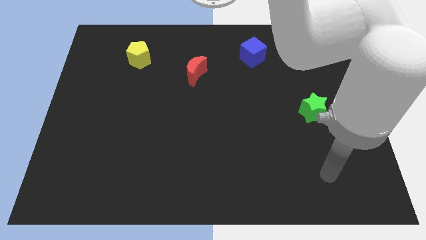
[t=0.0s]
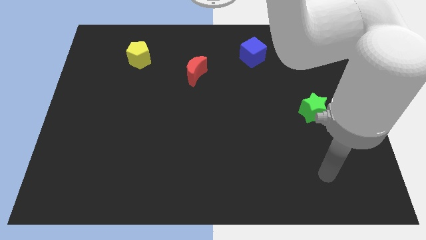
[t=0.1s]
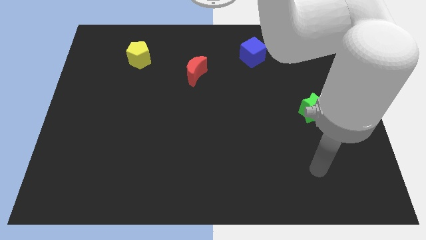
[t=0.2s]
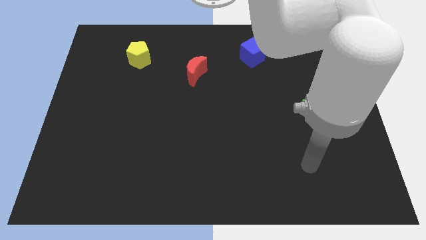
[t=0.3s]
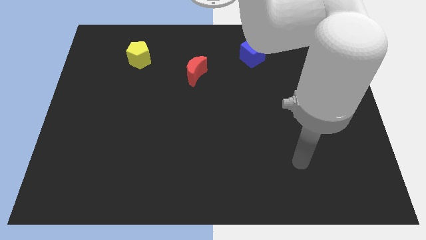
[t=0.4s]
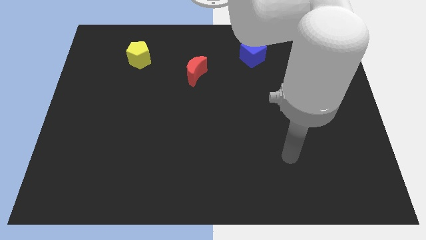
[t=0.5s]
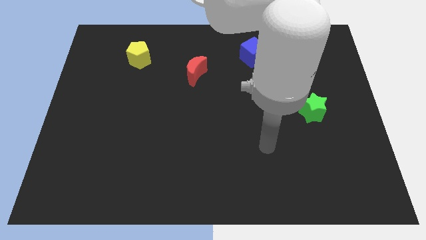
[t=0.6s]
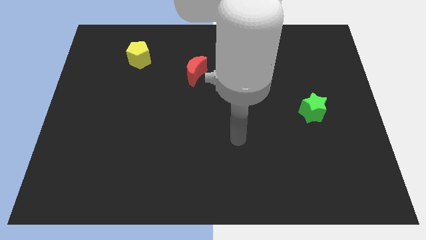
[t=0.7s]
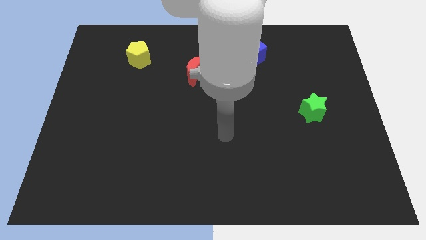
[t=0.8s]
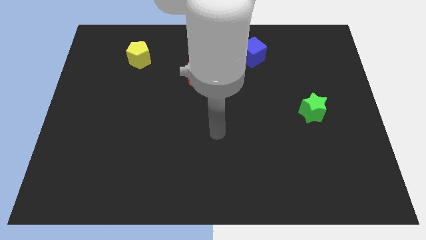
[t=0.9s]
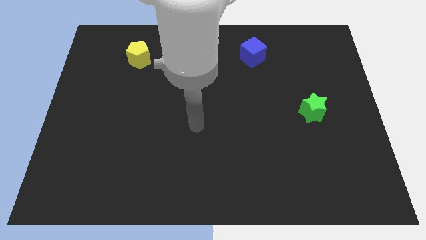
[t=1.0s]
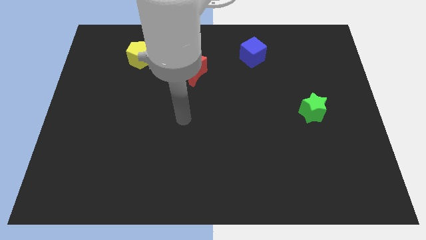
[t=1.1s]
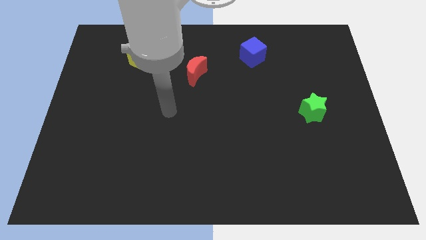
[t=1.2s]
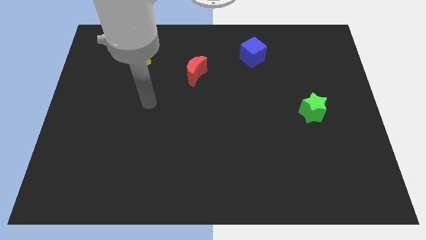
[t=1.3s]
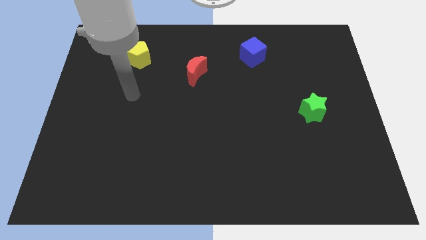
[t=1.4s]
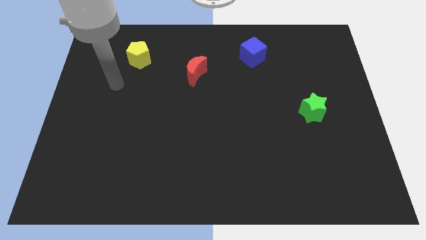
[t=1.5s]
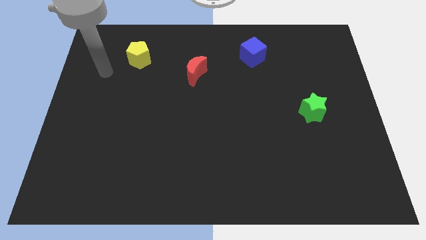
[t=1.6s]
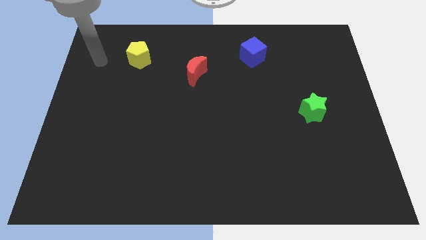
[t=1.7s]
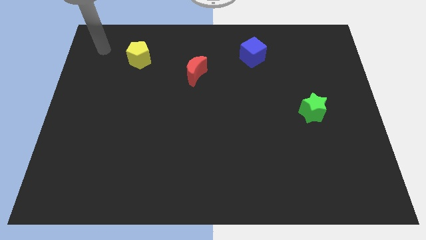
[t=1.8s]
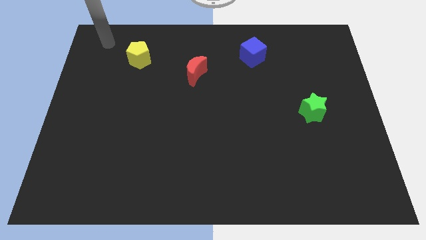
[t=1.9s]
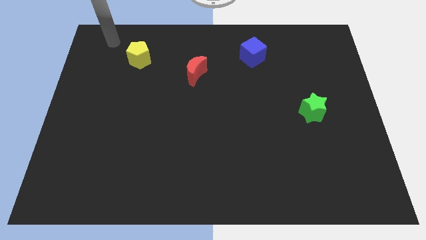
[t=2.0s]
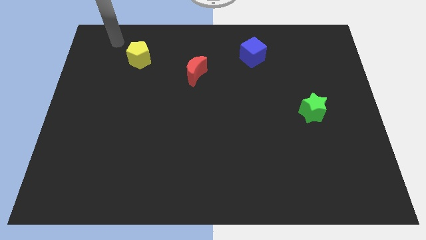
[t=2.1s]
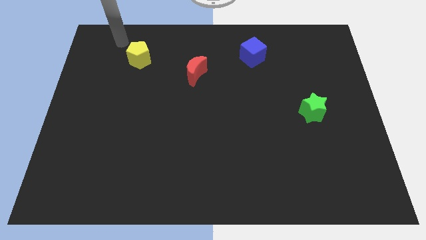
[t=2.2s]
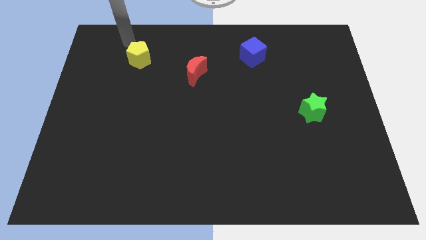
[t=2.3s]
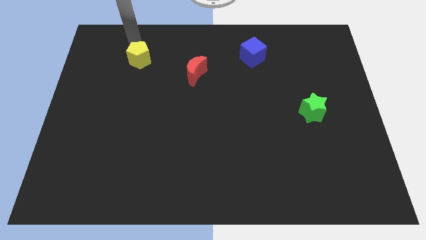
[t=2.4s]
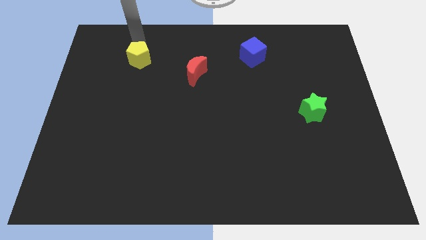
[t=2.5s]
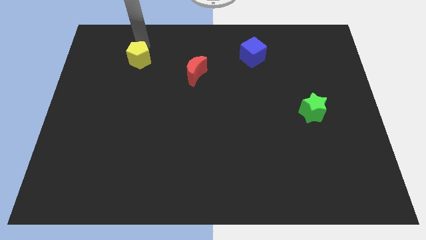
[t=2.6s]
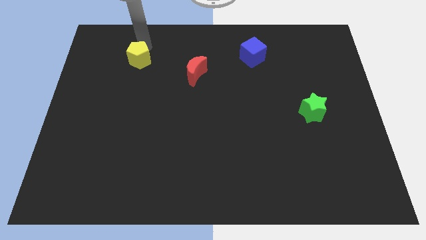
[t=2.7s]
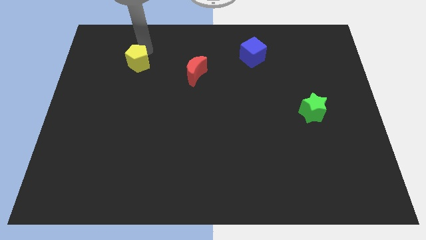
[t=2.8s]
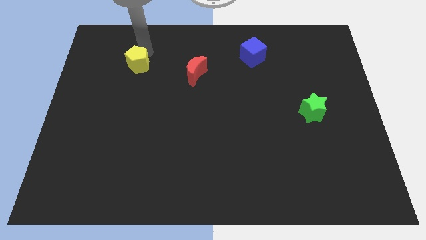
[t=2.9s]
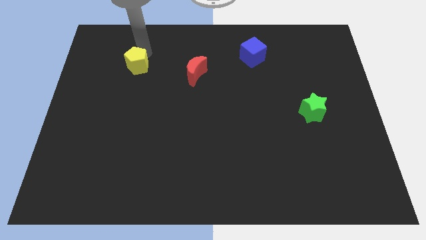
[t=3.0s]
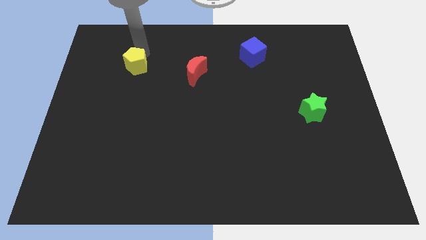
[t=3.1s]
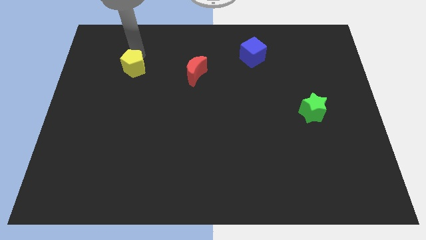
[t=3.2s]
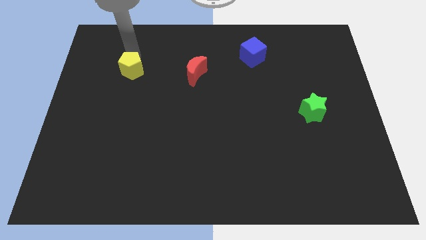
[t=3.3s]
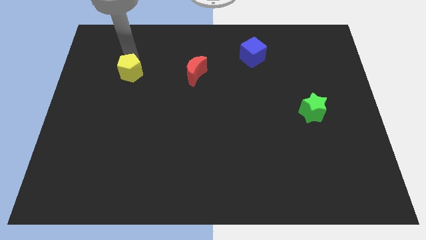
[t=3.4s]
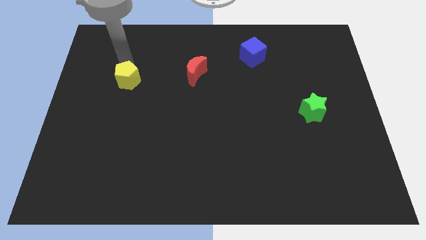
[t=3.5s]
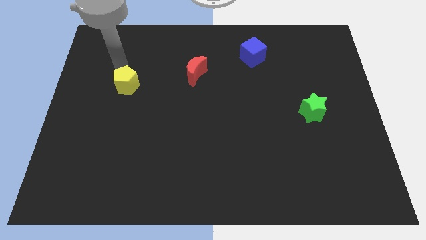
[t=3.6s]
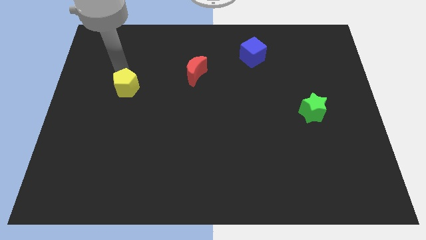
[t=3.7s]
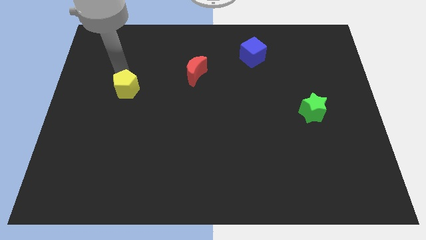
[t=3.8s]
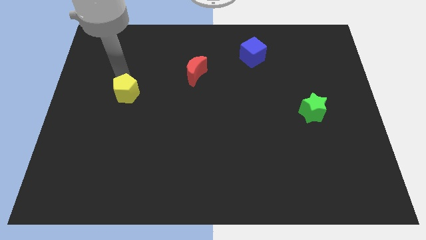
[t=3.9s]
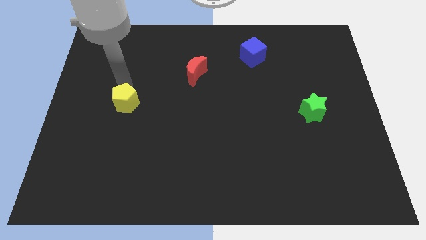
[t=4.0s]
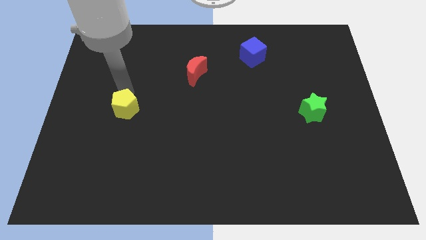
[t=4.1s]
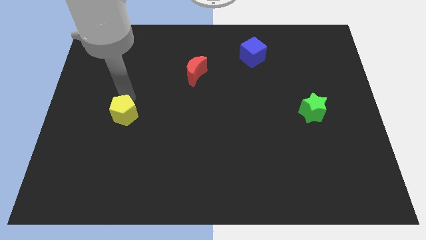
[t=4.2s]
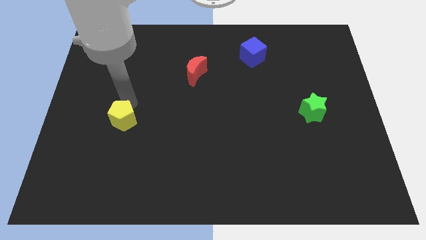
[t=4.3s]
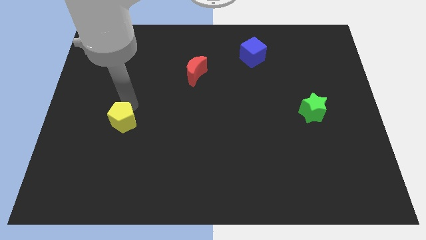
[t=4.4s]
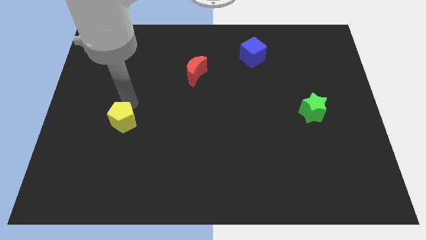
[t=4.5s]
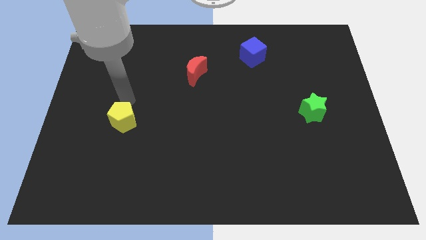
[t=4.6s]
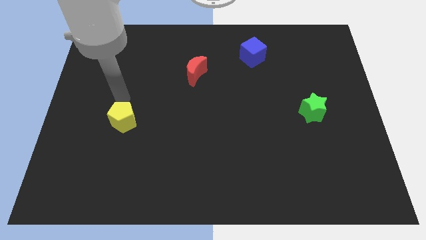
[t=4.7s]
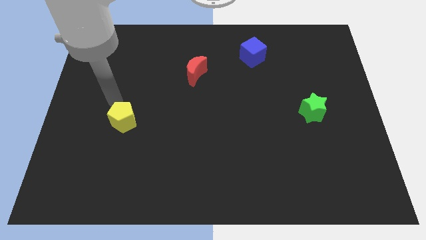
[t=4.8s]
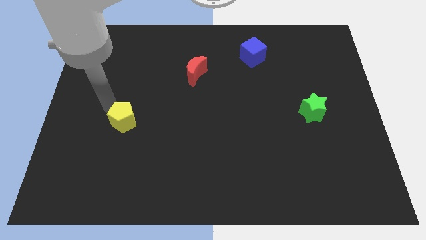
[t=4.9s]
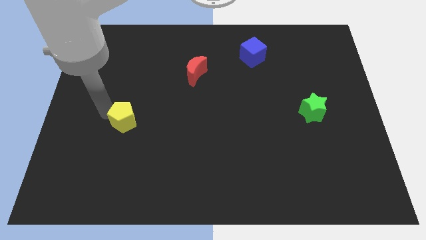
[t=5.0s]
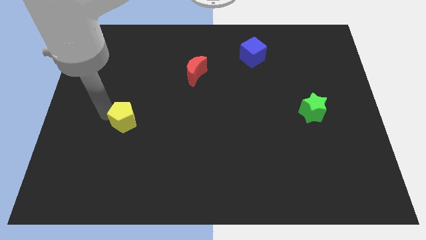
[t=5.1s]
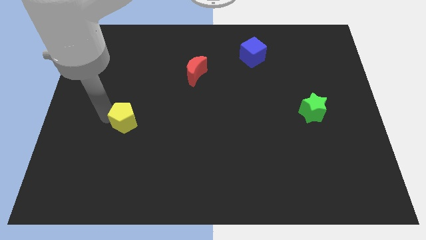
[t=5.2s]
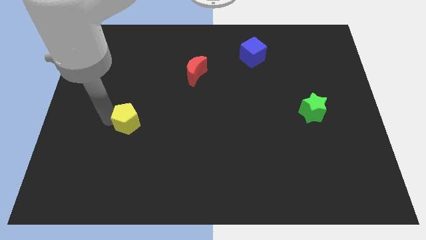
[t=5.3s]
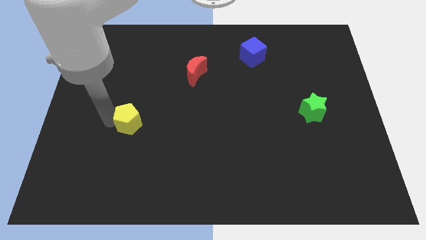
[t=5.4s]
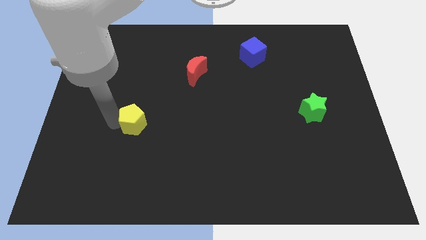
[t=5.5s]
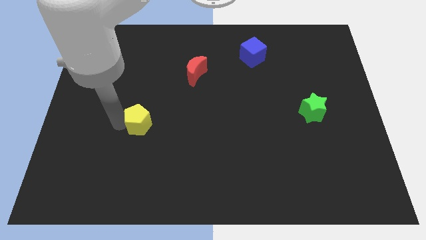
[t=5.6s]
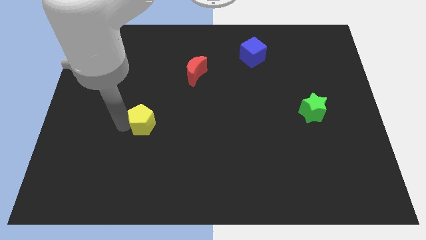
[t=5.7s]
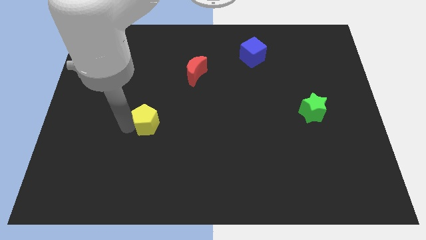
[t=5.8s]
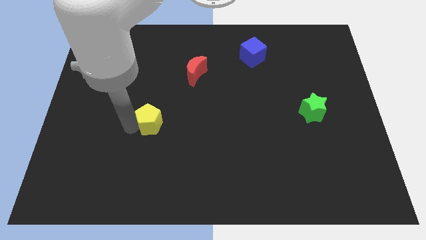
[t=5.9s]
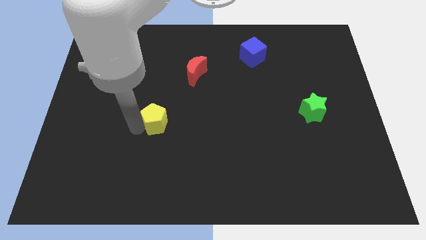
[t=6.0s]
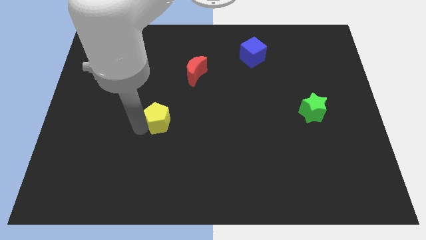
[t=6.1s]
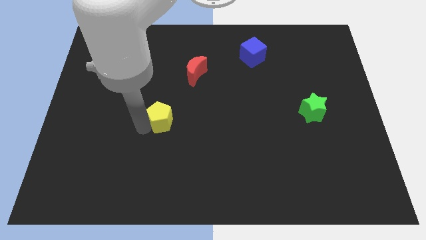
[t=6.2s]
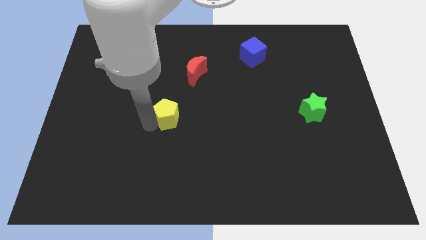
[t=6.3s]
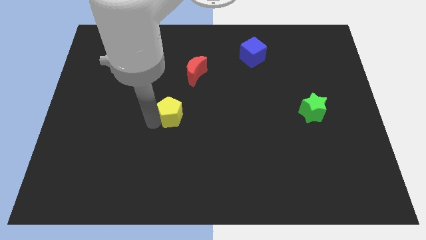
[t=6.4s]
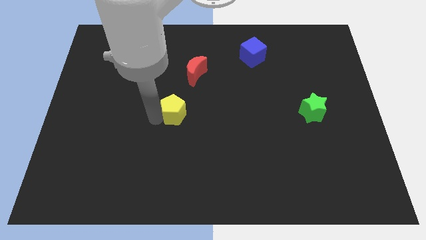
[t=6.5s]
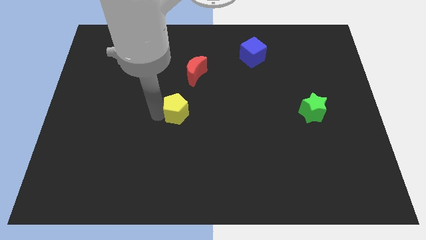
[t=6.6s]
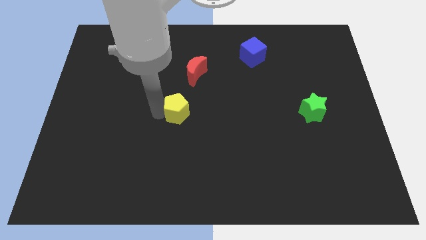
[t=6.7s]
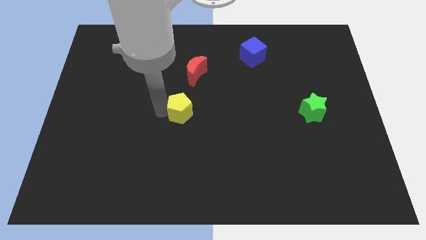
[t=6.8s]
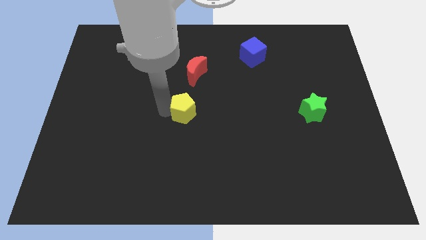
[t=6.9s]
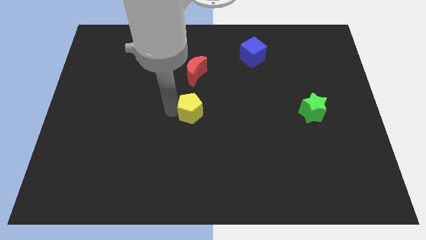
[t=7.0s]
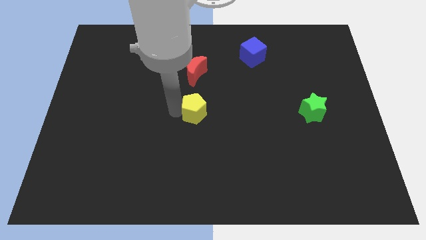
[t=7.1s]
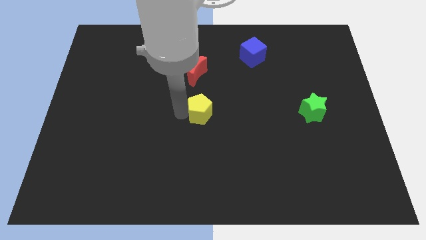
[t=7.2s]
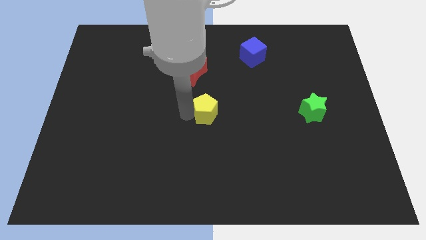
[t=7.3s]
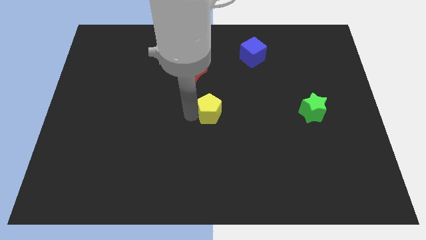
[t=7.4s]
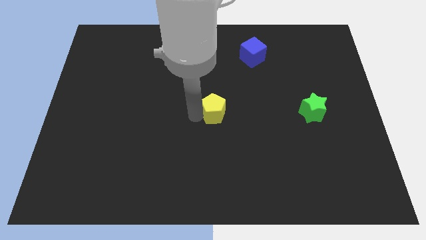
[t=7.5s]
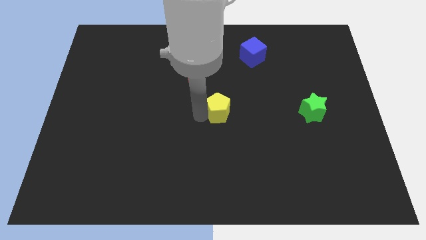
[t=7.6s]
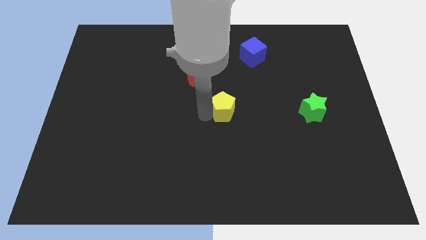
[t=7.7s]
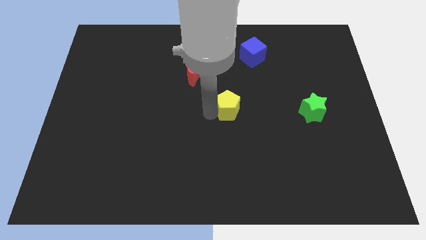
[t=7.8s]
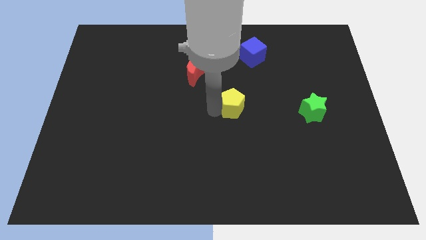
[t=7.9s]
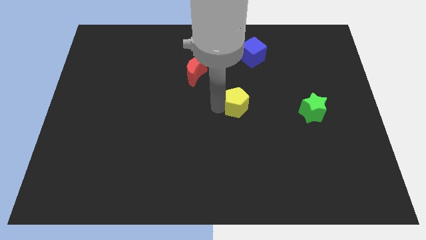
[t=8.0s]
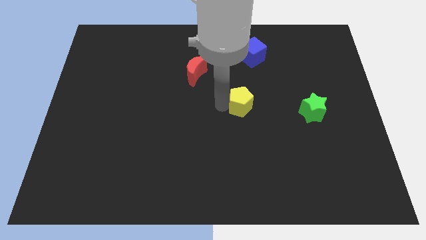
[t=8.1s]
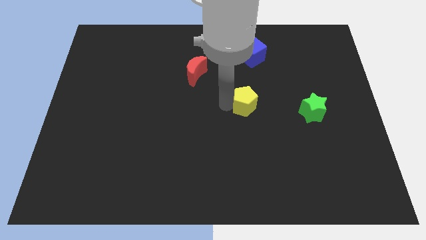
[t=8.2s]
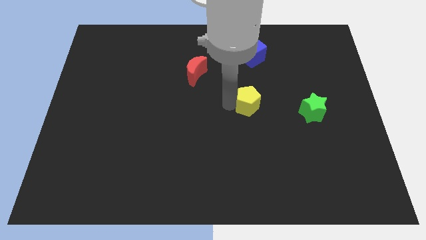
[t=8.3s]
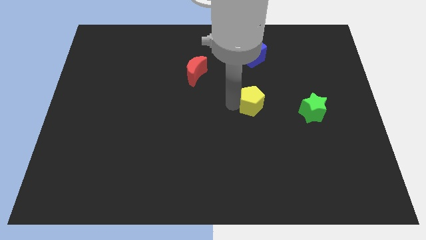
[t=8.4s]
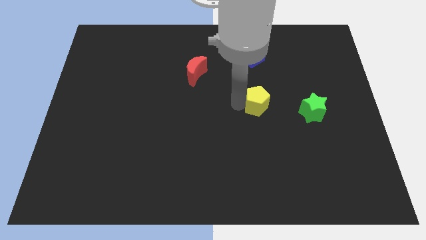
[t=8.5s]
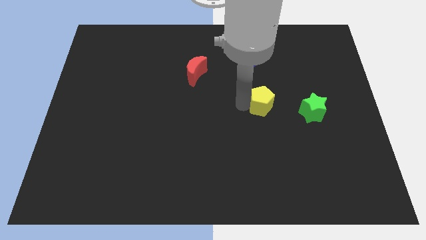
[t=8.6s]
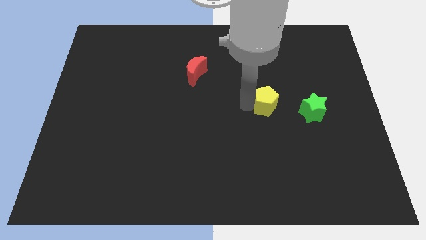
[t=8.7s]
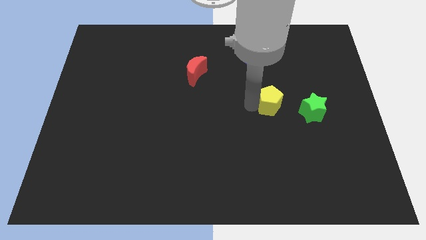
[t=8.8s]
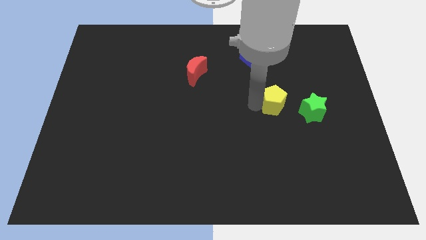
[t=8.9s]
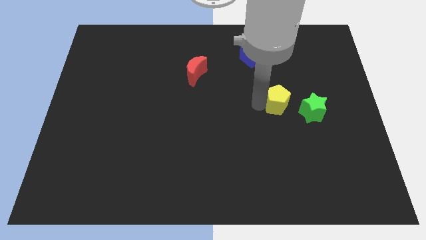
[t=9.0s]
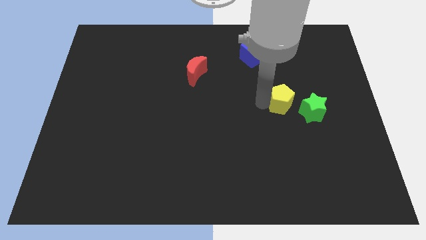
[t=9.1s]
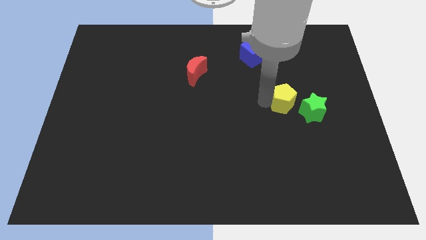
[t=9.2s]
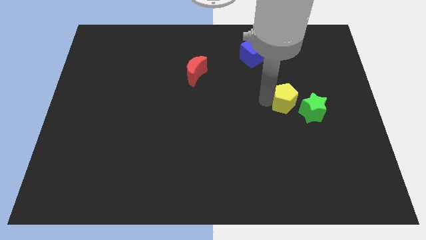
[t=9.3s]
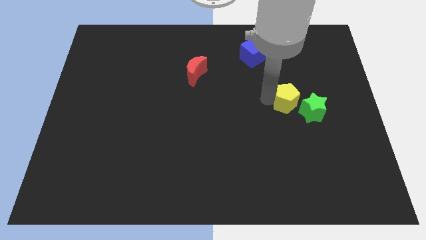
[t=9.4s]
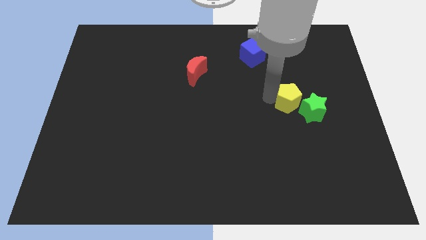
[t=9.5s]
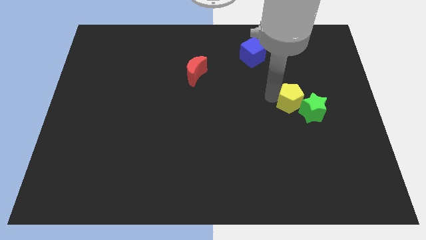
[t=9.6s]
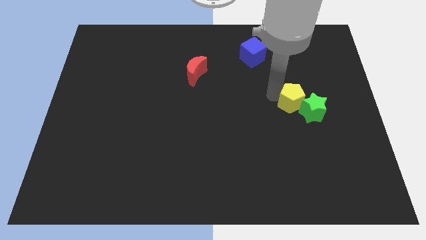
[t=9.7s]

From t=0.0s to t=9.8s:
put the yellow pentagon next to the green block
